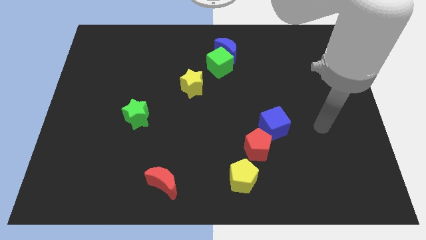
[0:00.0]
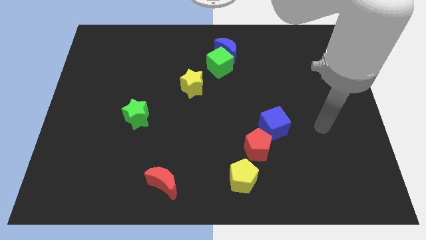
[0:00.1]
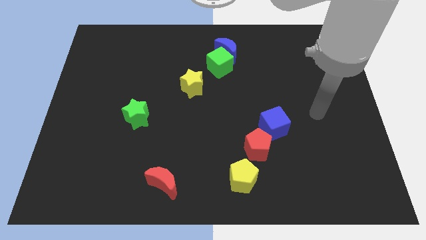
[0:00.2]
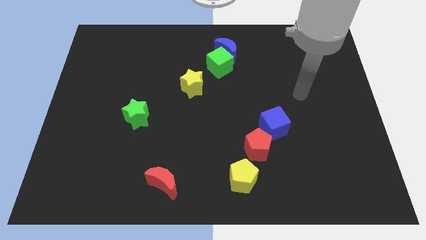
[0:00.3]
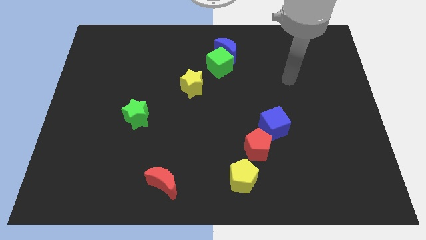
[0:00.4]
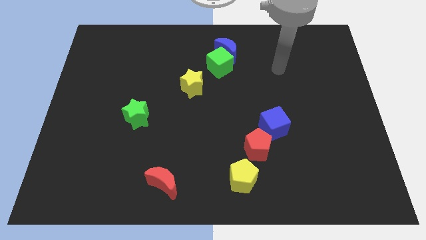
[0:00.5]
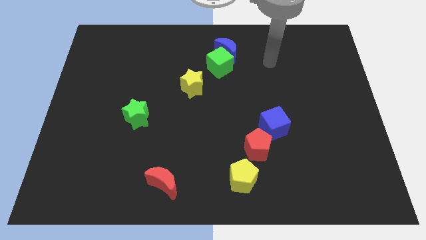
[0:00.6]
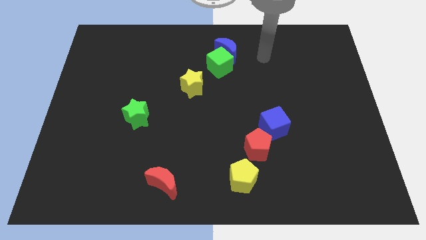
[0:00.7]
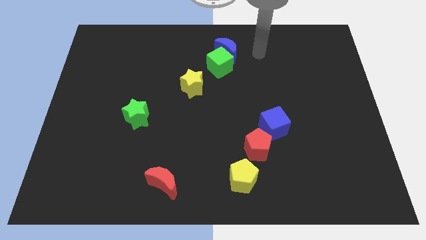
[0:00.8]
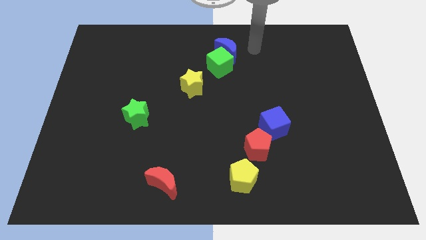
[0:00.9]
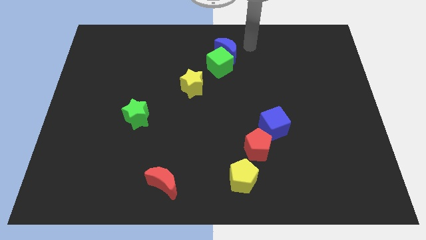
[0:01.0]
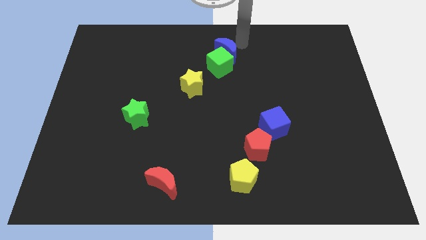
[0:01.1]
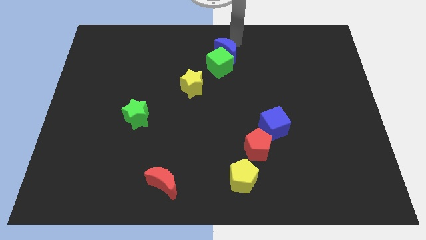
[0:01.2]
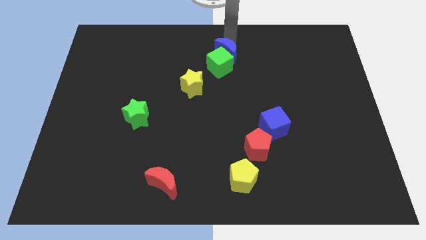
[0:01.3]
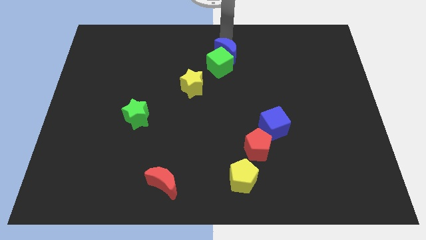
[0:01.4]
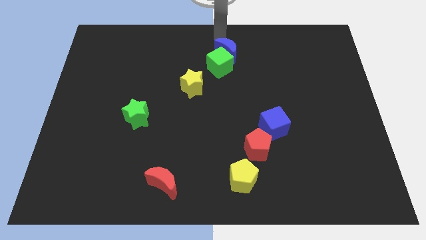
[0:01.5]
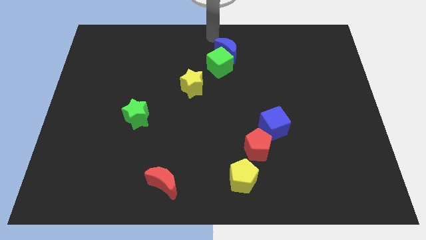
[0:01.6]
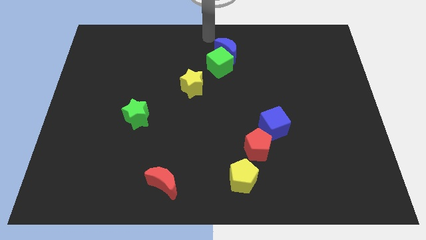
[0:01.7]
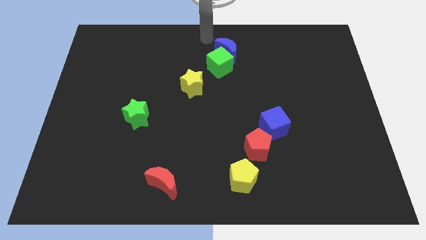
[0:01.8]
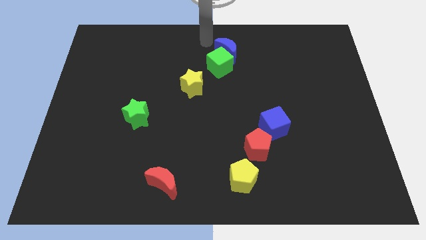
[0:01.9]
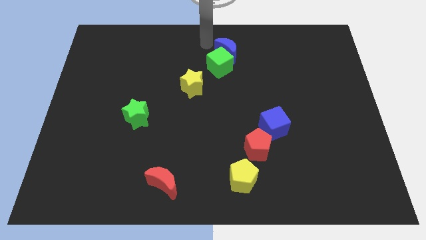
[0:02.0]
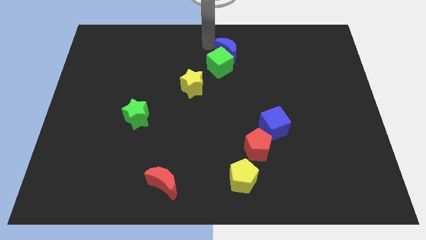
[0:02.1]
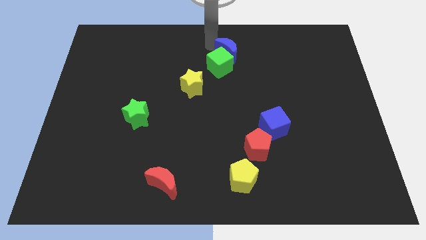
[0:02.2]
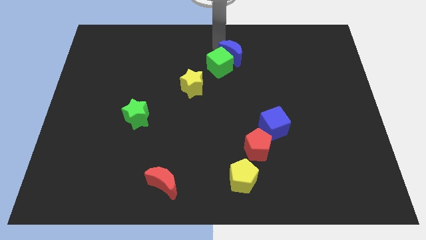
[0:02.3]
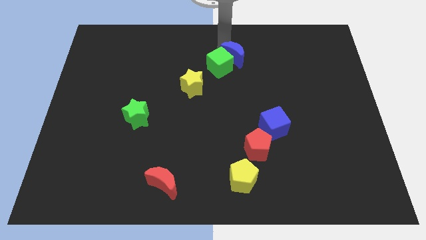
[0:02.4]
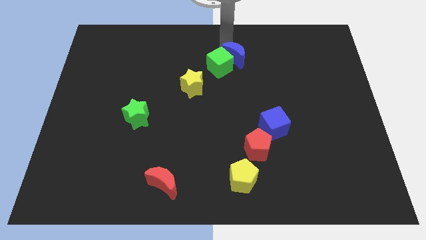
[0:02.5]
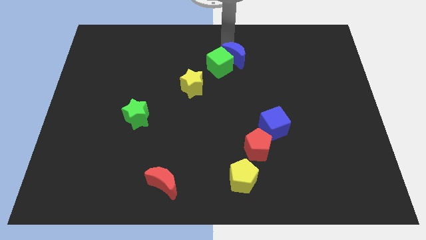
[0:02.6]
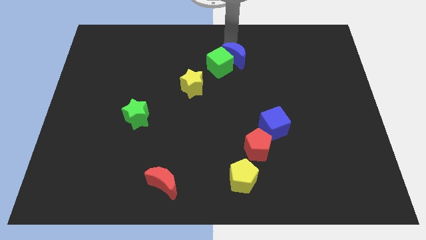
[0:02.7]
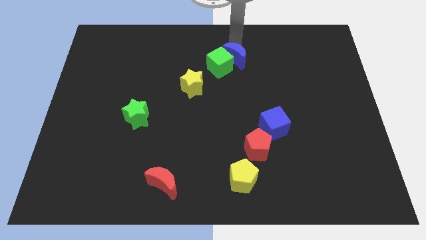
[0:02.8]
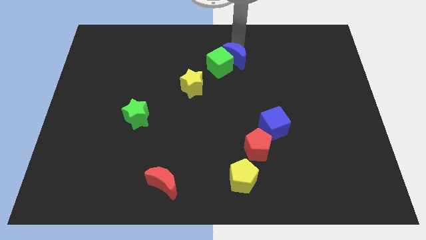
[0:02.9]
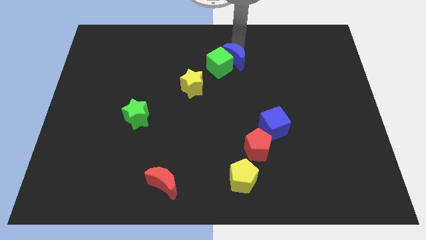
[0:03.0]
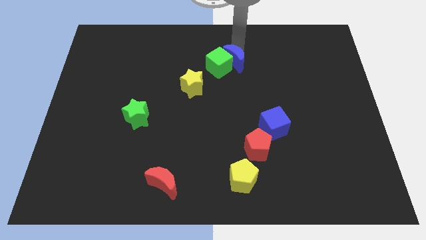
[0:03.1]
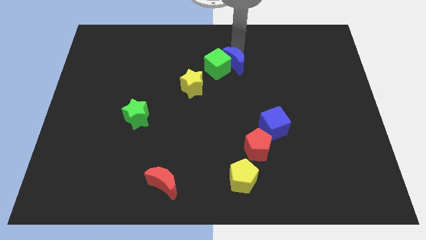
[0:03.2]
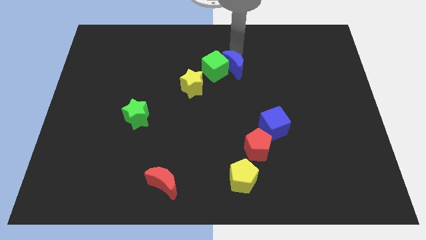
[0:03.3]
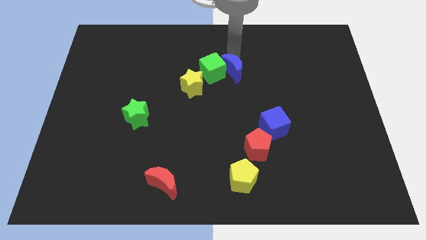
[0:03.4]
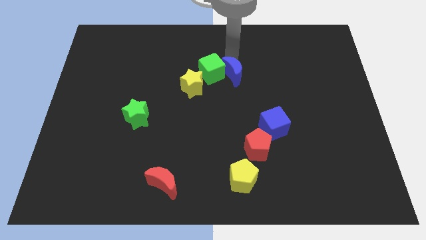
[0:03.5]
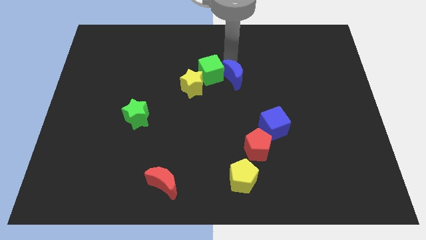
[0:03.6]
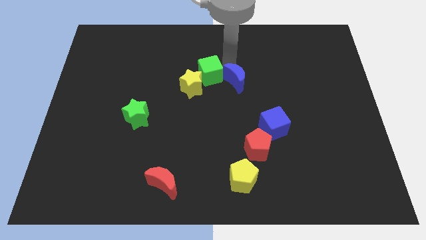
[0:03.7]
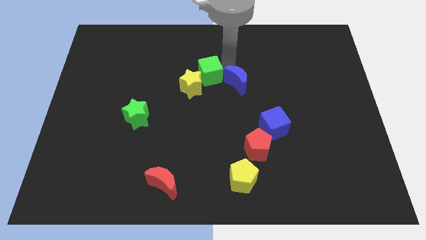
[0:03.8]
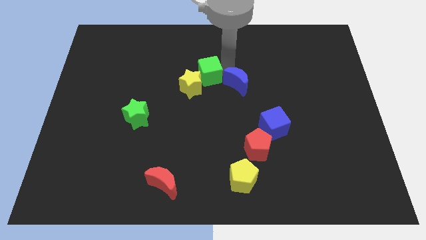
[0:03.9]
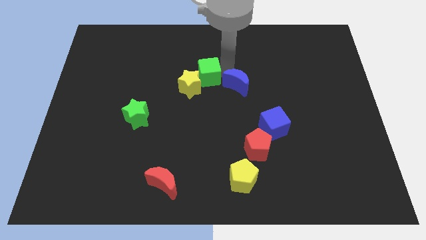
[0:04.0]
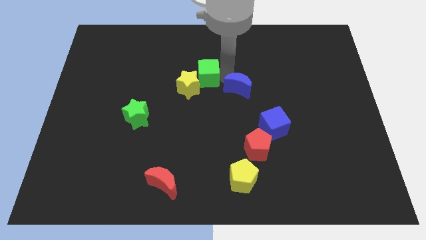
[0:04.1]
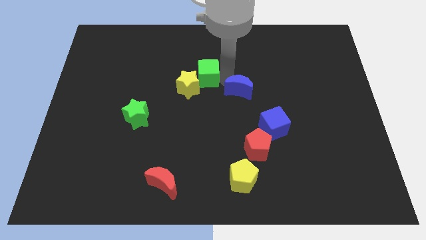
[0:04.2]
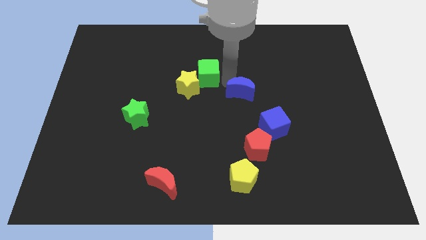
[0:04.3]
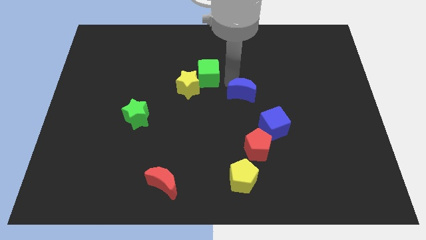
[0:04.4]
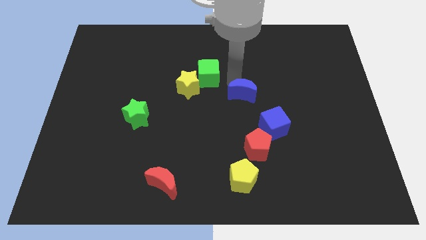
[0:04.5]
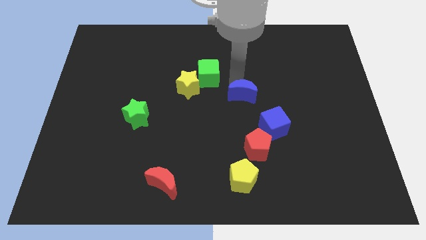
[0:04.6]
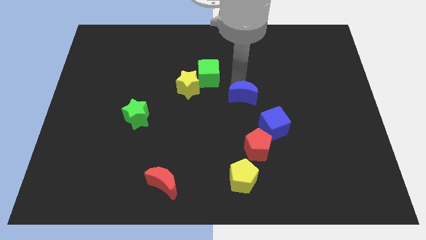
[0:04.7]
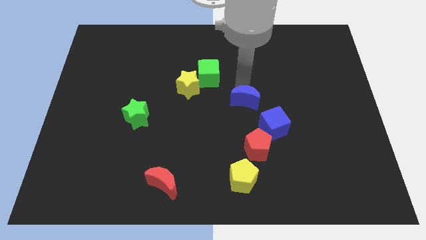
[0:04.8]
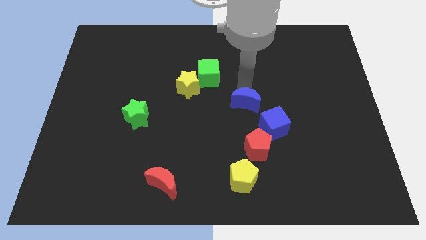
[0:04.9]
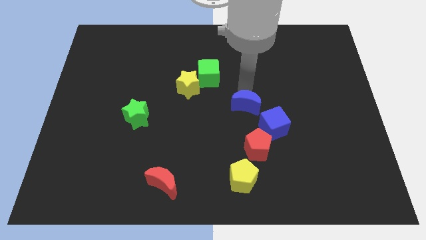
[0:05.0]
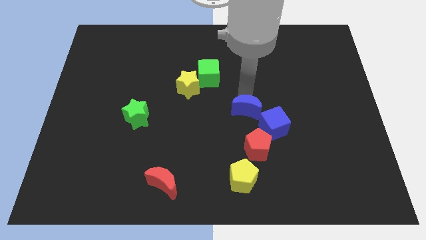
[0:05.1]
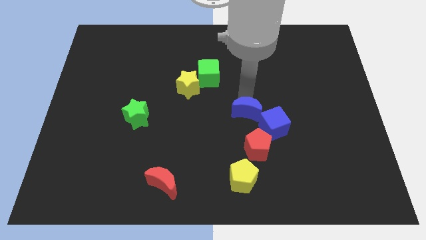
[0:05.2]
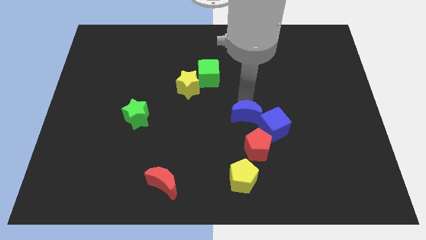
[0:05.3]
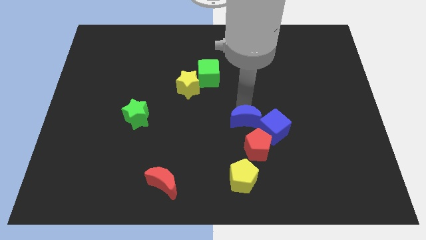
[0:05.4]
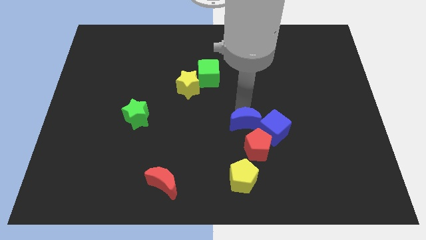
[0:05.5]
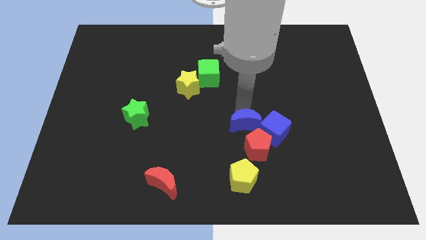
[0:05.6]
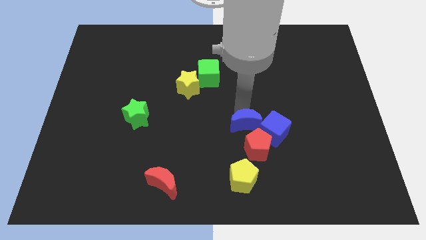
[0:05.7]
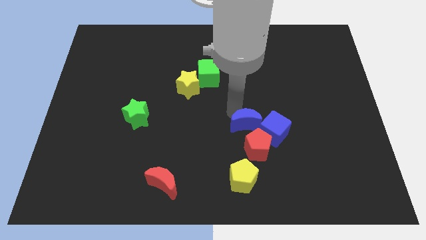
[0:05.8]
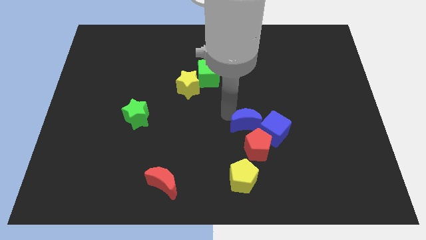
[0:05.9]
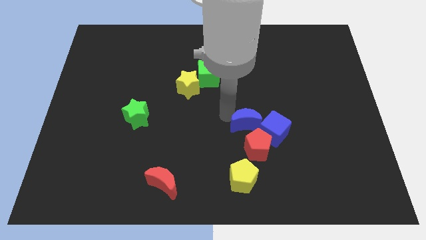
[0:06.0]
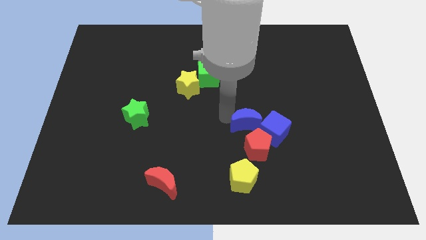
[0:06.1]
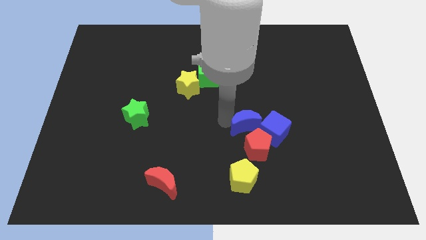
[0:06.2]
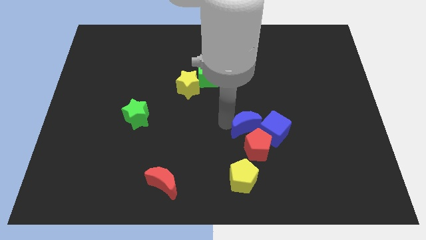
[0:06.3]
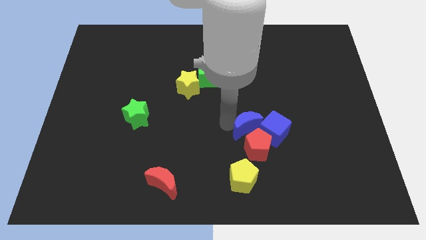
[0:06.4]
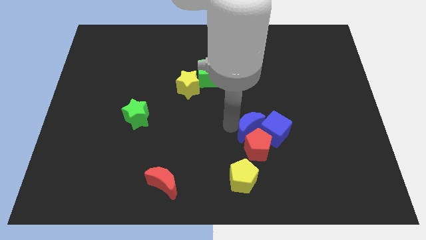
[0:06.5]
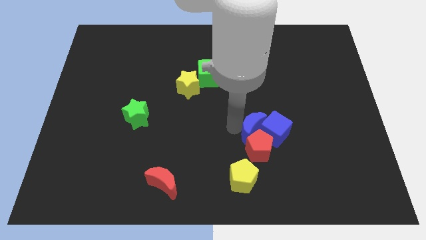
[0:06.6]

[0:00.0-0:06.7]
move the blue moon towards the blue cube

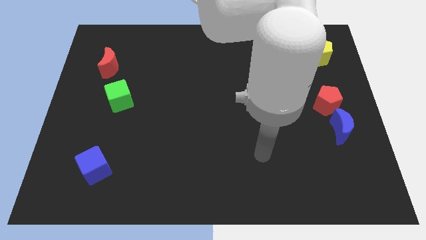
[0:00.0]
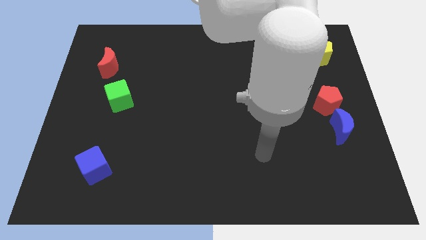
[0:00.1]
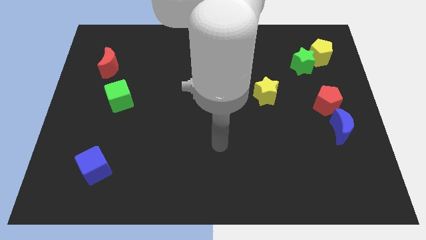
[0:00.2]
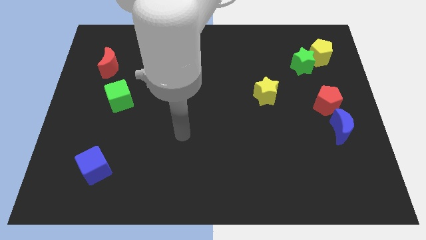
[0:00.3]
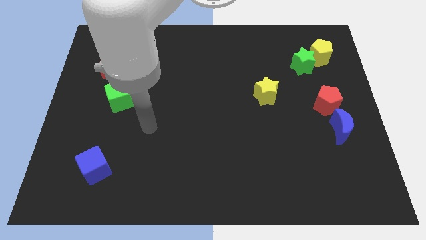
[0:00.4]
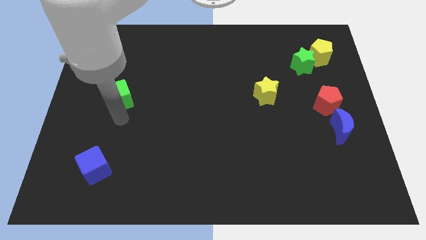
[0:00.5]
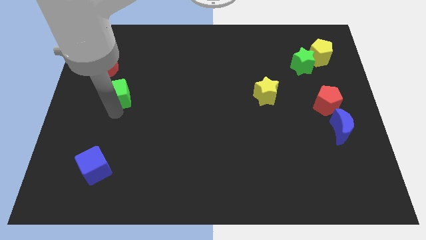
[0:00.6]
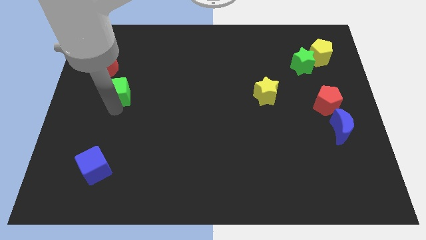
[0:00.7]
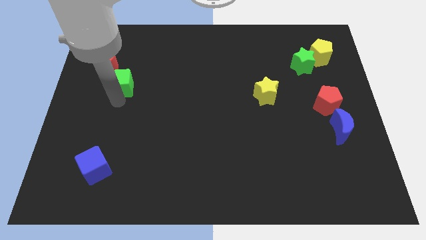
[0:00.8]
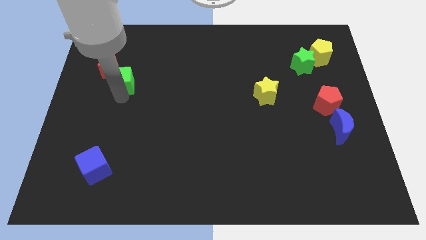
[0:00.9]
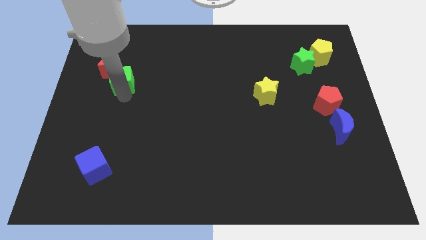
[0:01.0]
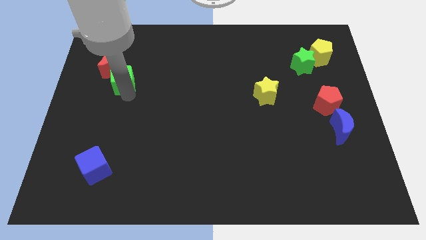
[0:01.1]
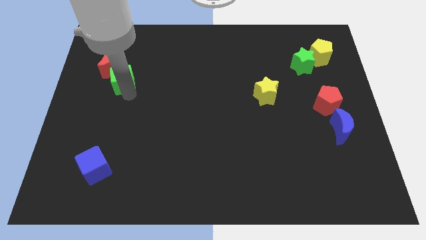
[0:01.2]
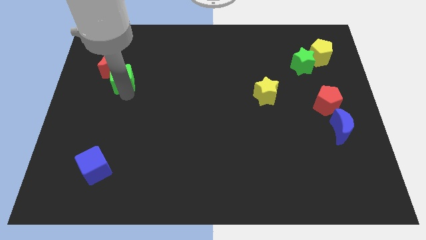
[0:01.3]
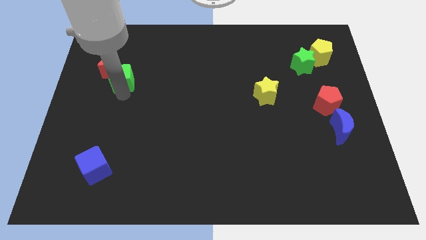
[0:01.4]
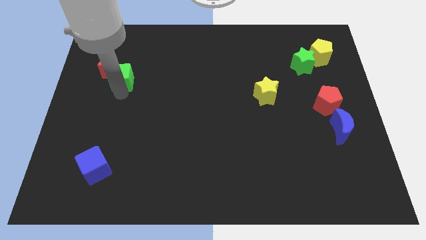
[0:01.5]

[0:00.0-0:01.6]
push the green cube close to the red moon
